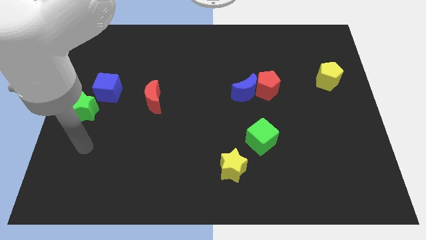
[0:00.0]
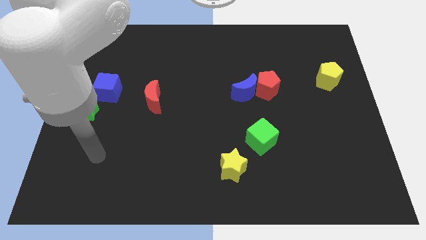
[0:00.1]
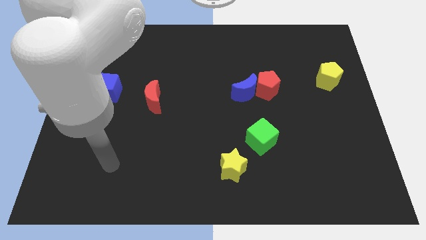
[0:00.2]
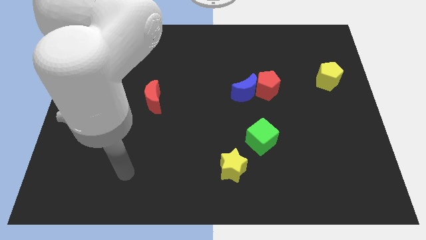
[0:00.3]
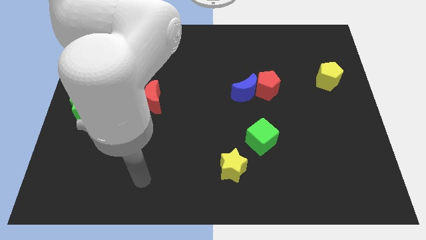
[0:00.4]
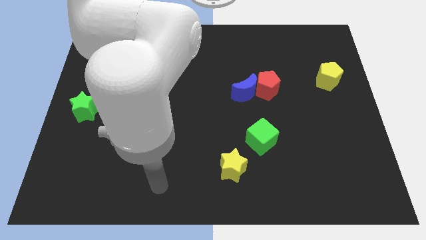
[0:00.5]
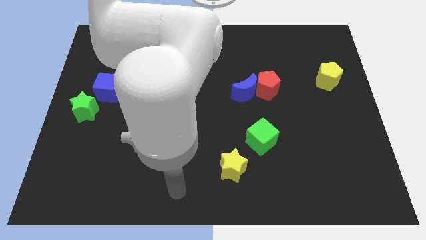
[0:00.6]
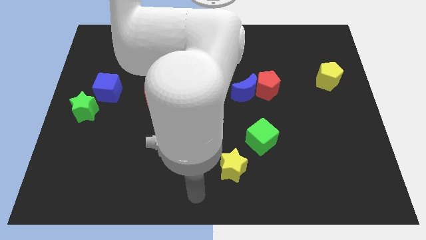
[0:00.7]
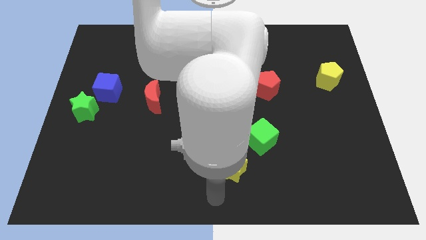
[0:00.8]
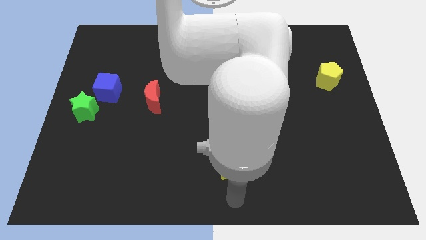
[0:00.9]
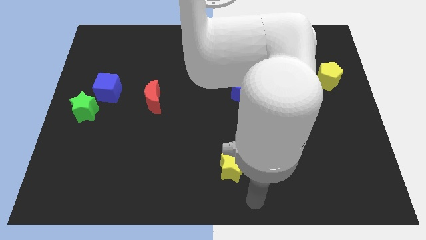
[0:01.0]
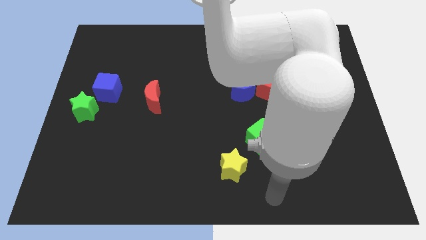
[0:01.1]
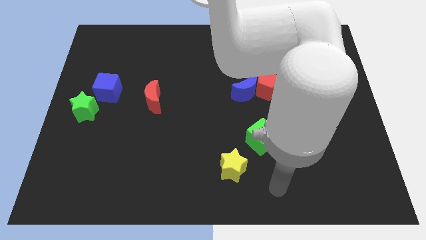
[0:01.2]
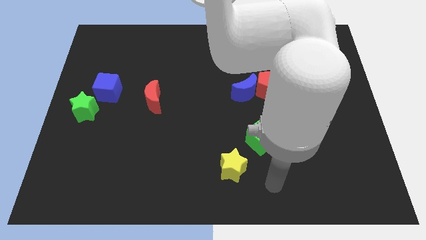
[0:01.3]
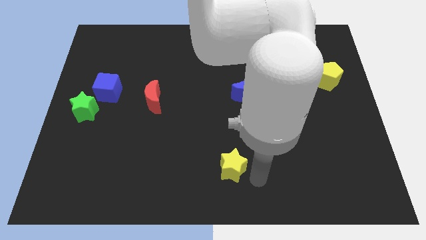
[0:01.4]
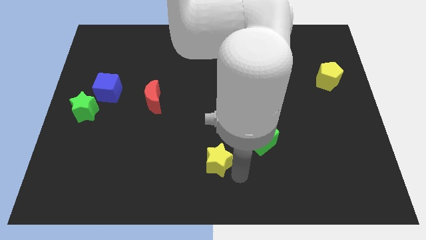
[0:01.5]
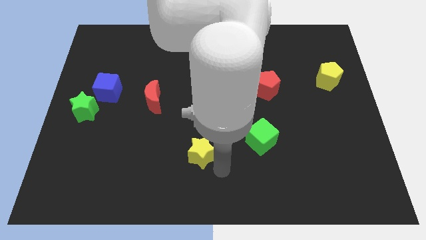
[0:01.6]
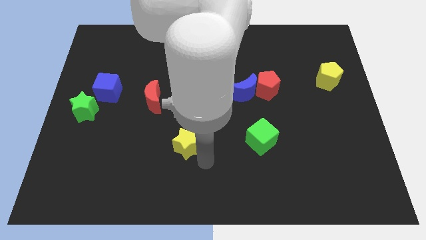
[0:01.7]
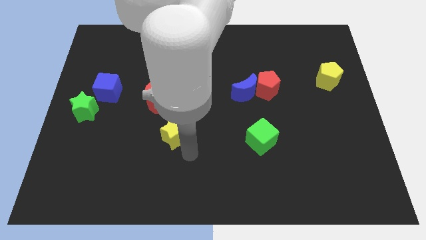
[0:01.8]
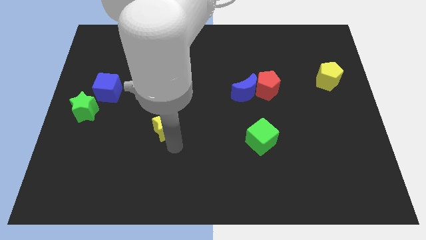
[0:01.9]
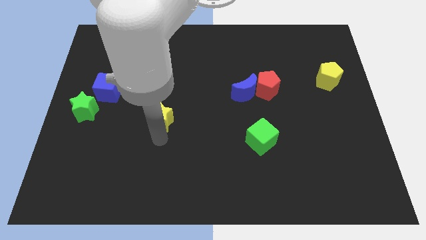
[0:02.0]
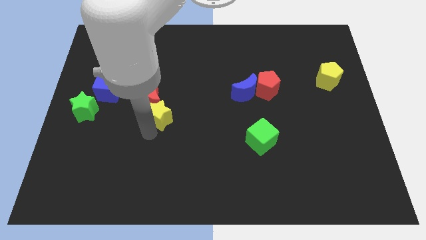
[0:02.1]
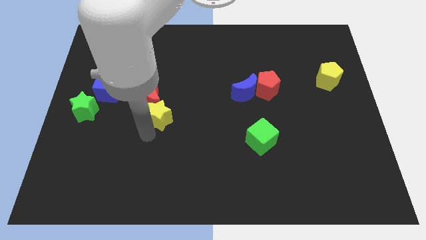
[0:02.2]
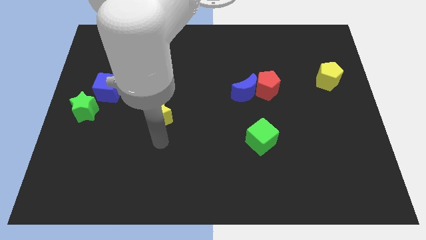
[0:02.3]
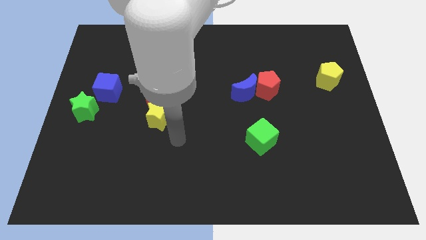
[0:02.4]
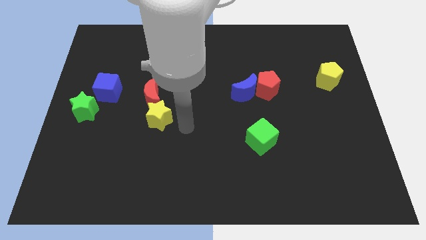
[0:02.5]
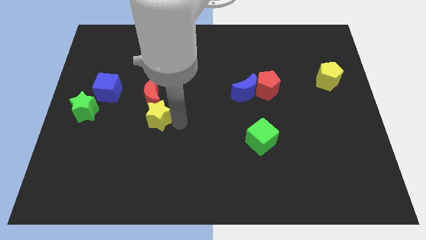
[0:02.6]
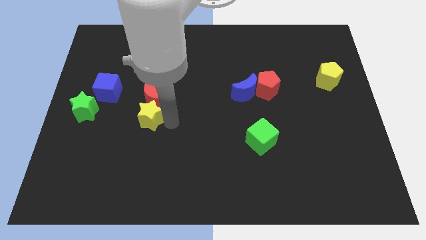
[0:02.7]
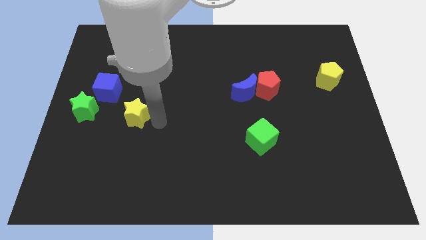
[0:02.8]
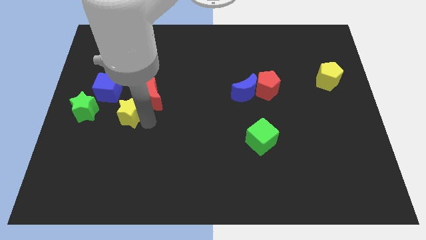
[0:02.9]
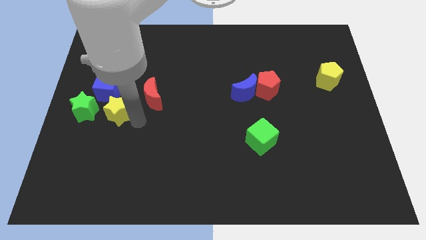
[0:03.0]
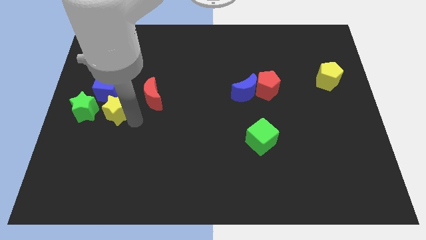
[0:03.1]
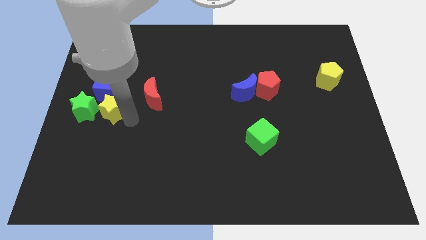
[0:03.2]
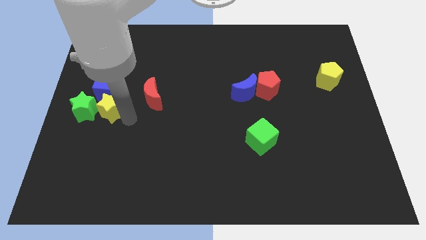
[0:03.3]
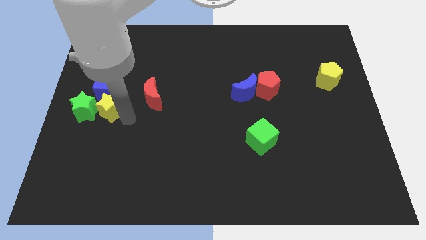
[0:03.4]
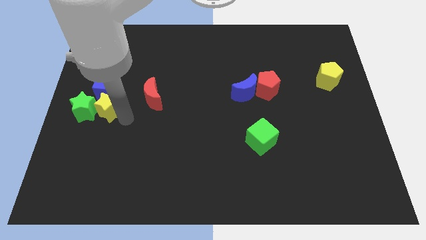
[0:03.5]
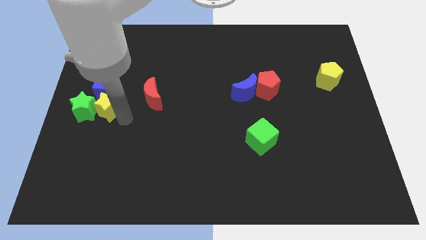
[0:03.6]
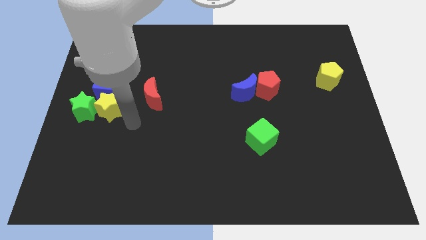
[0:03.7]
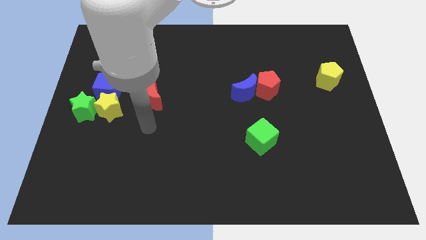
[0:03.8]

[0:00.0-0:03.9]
push the yellow star to the right of the green star

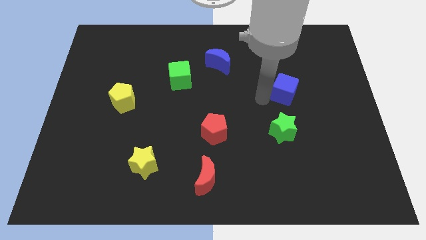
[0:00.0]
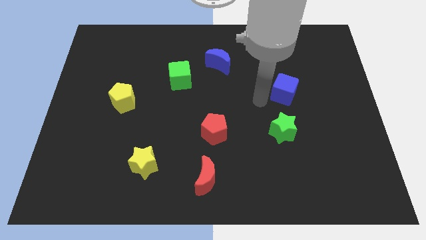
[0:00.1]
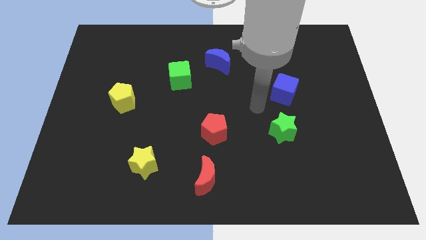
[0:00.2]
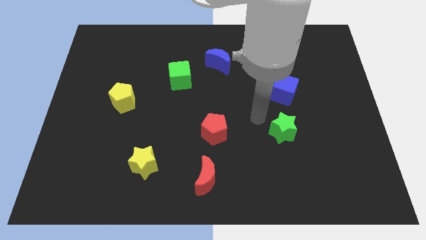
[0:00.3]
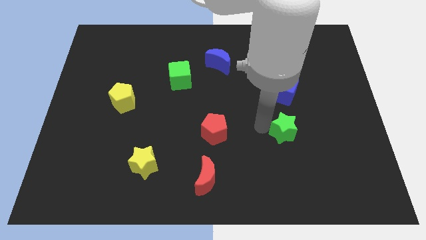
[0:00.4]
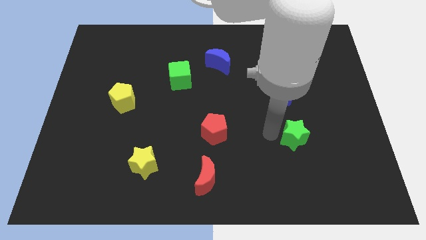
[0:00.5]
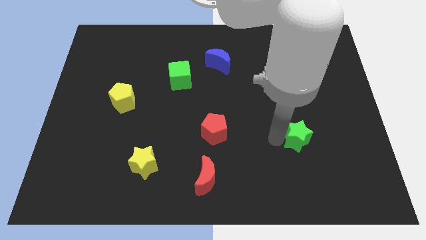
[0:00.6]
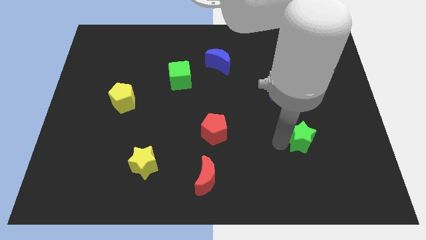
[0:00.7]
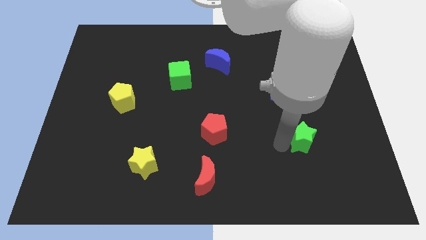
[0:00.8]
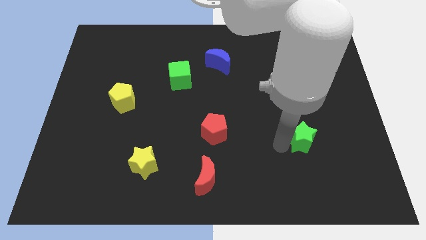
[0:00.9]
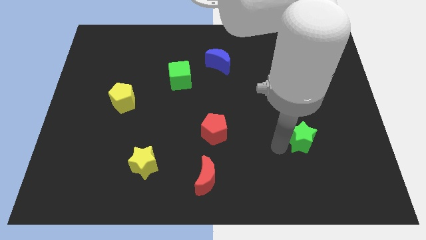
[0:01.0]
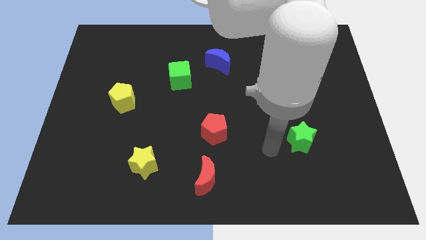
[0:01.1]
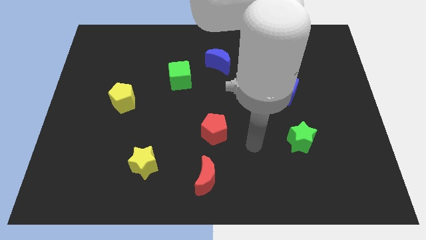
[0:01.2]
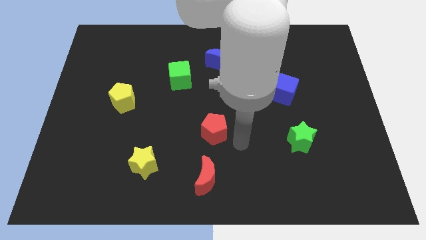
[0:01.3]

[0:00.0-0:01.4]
move the green star towards the right

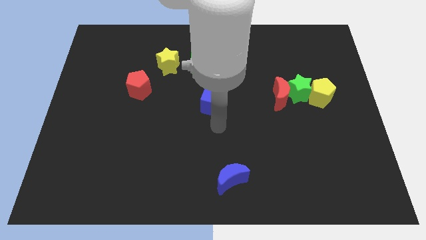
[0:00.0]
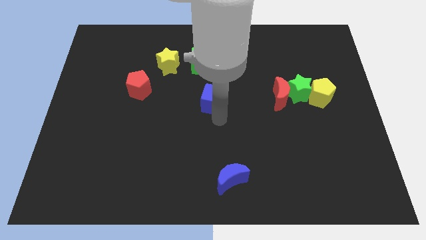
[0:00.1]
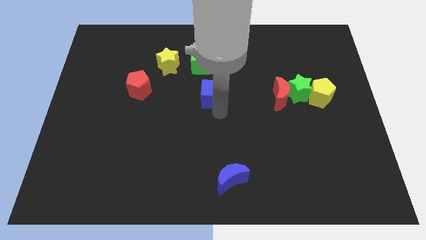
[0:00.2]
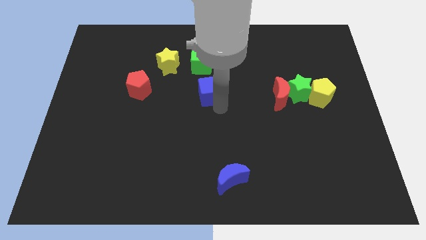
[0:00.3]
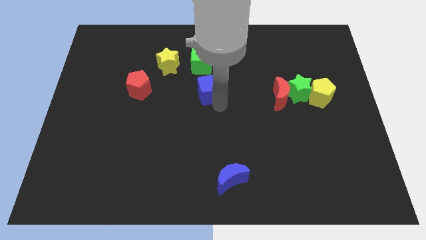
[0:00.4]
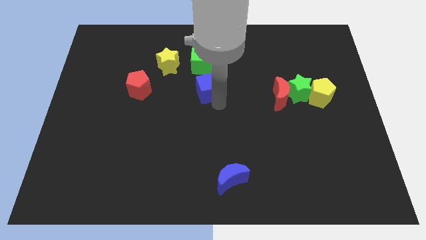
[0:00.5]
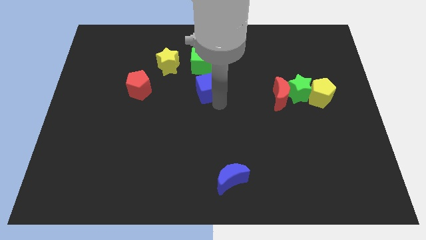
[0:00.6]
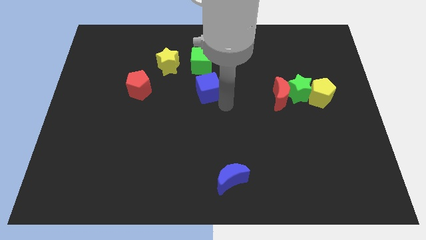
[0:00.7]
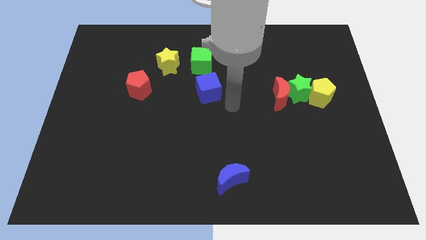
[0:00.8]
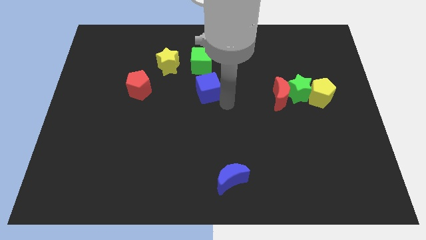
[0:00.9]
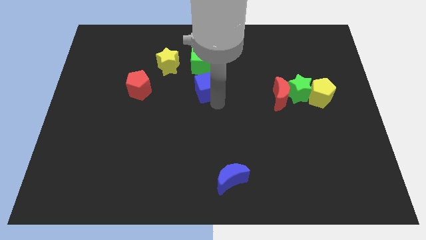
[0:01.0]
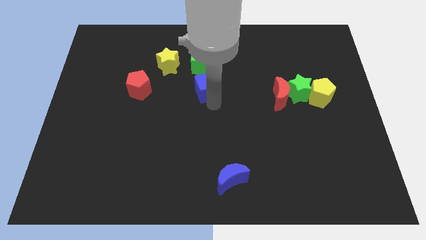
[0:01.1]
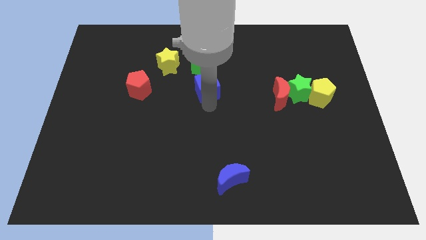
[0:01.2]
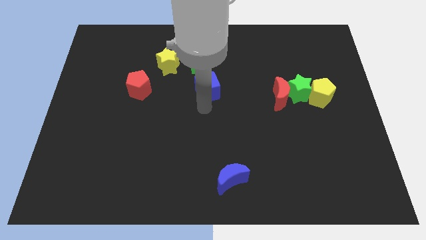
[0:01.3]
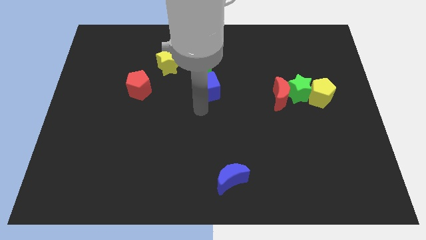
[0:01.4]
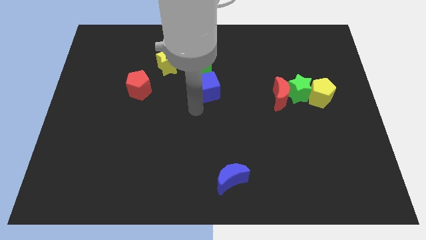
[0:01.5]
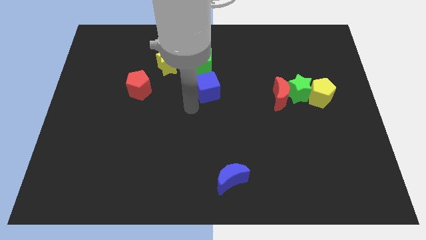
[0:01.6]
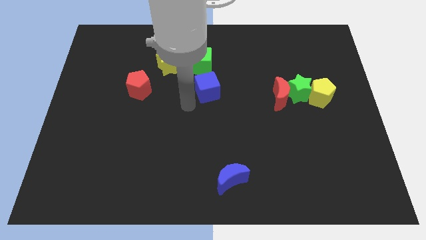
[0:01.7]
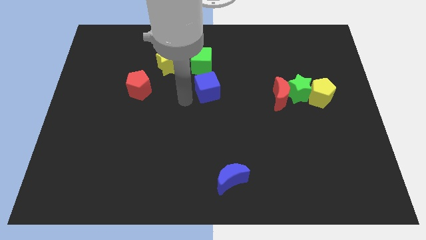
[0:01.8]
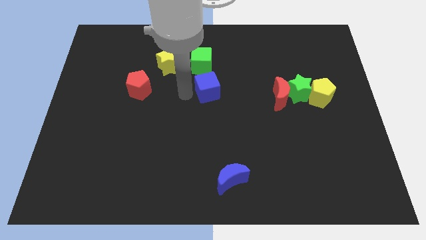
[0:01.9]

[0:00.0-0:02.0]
place the blue cube down to the green cube

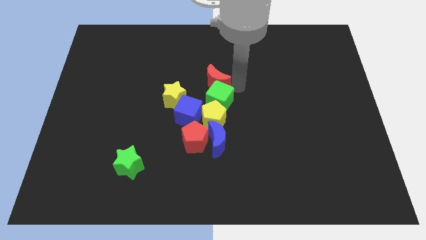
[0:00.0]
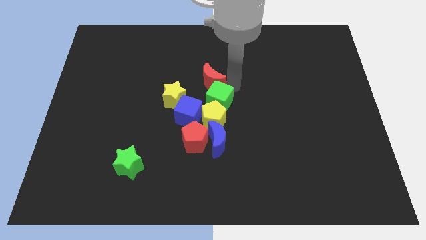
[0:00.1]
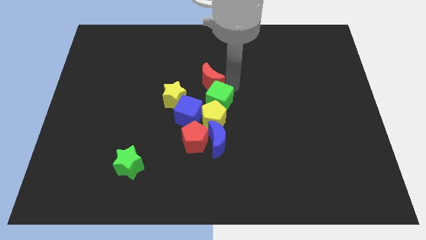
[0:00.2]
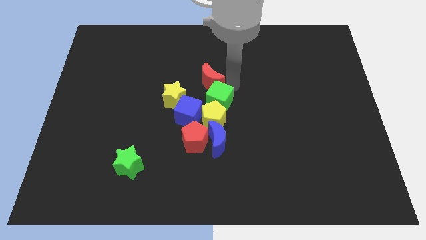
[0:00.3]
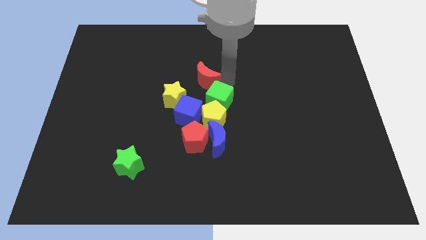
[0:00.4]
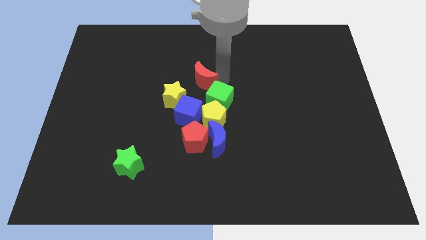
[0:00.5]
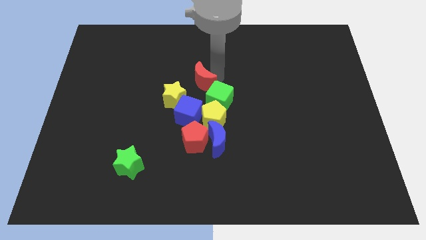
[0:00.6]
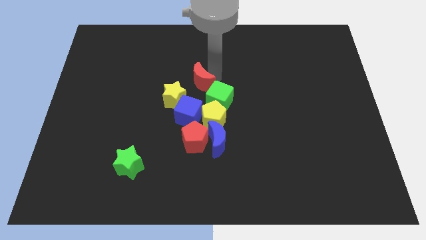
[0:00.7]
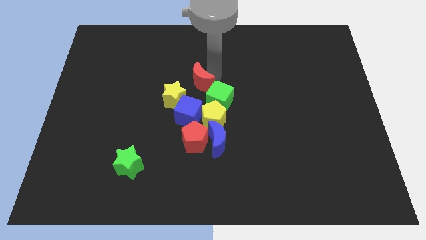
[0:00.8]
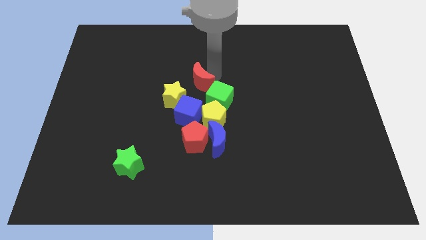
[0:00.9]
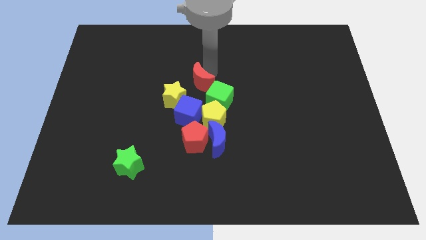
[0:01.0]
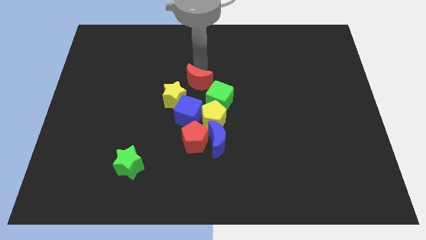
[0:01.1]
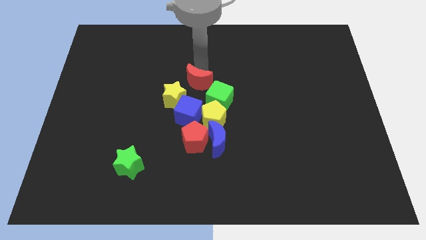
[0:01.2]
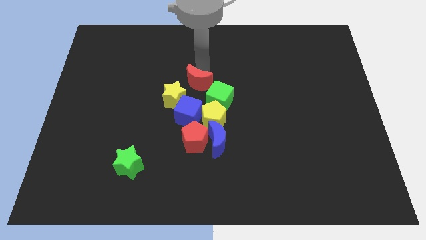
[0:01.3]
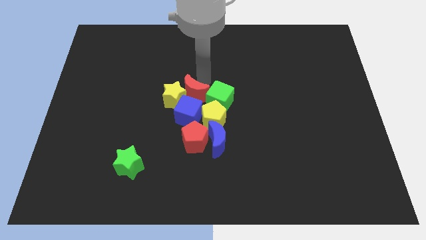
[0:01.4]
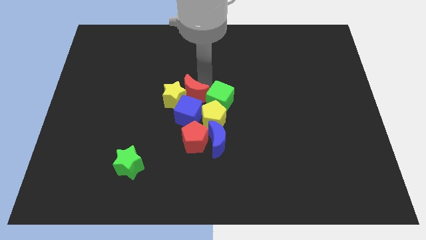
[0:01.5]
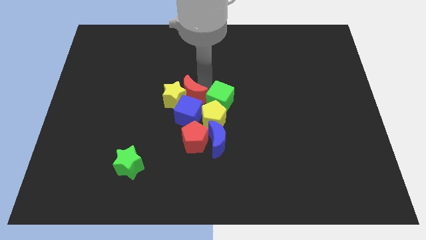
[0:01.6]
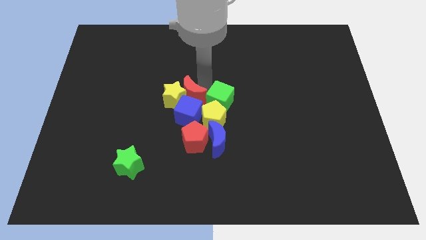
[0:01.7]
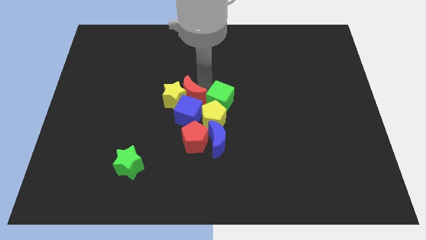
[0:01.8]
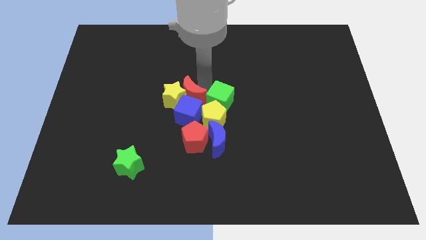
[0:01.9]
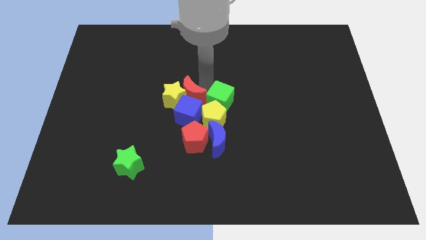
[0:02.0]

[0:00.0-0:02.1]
push the red crescent in between the yellow star and green cube
